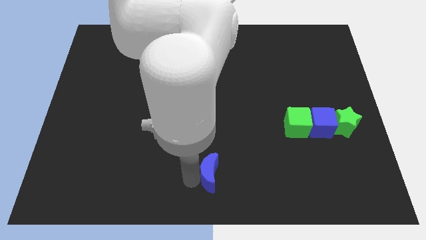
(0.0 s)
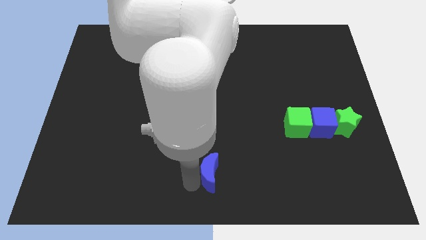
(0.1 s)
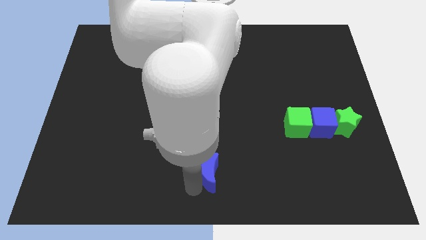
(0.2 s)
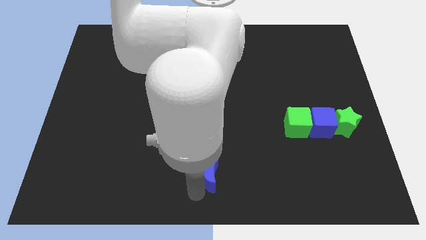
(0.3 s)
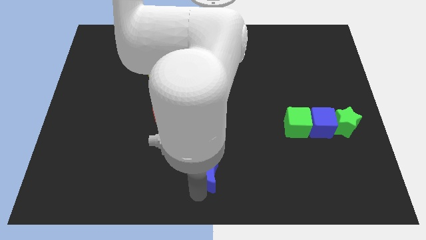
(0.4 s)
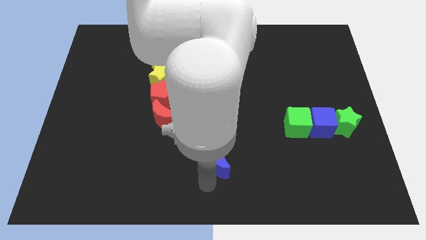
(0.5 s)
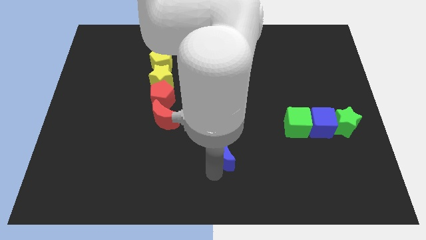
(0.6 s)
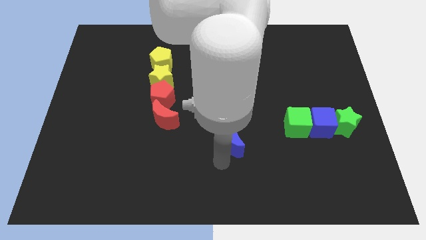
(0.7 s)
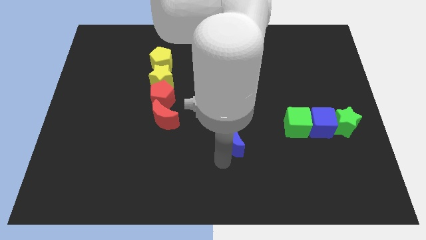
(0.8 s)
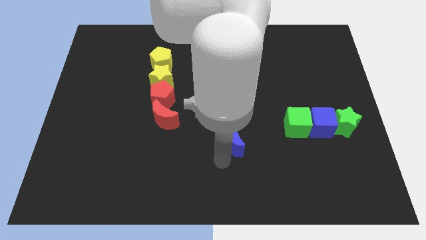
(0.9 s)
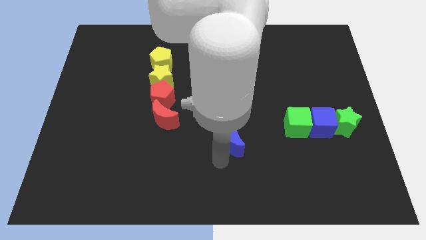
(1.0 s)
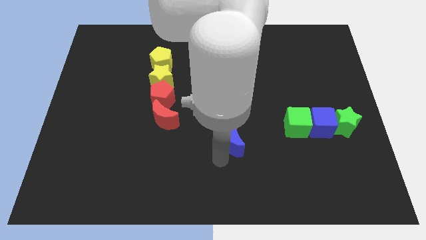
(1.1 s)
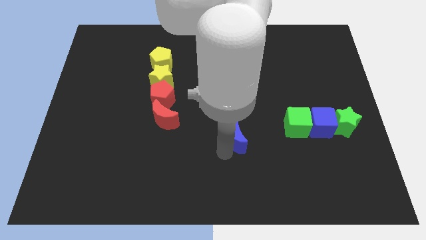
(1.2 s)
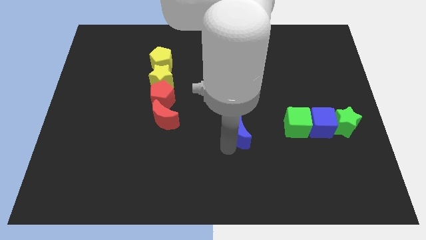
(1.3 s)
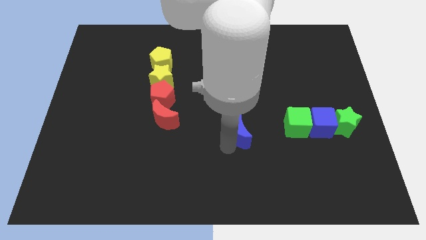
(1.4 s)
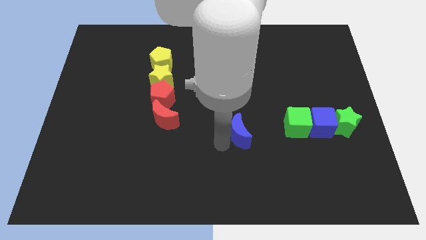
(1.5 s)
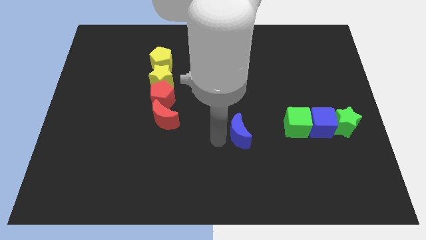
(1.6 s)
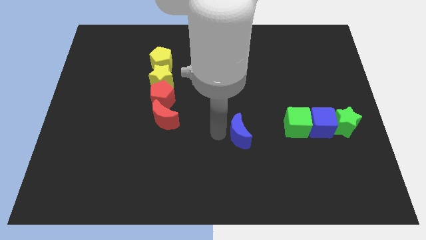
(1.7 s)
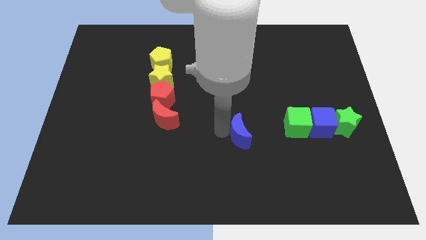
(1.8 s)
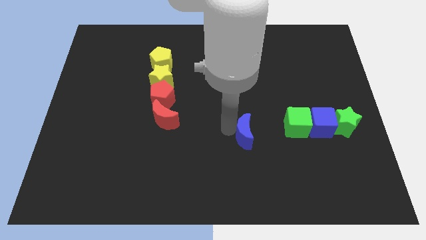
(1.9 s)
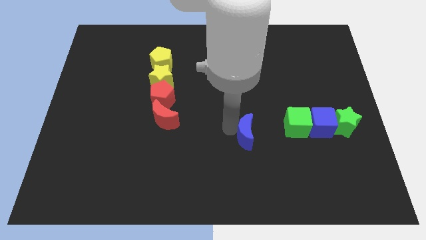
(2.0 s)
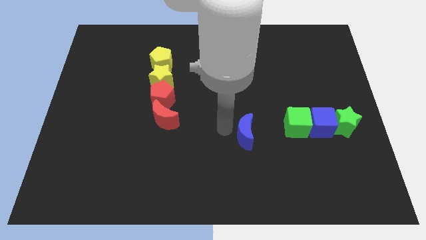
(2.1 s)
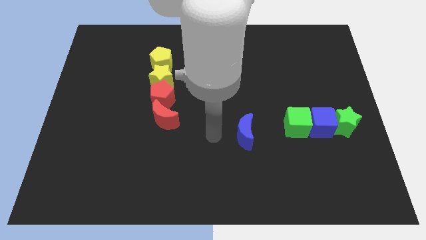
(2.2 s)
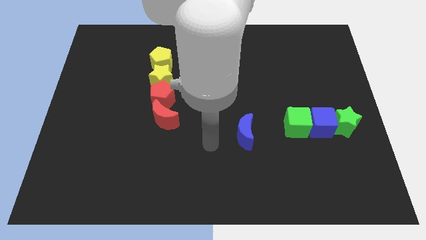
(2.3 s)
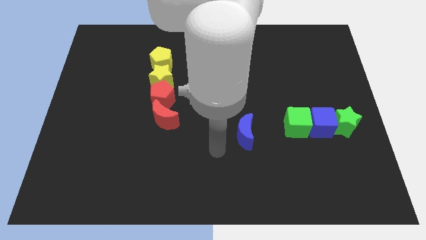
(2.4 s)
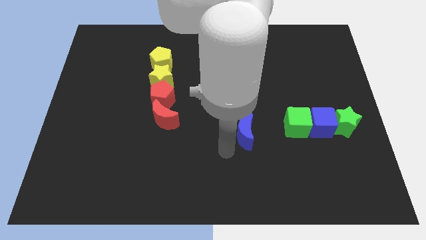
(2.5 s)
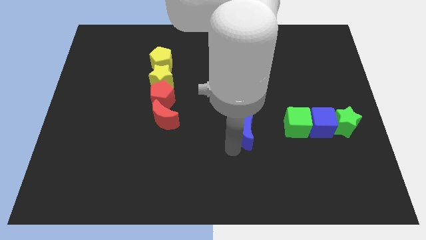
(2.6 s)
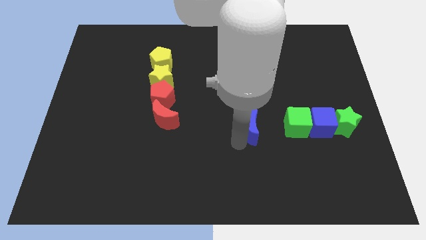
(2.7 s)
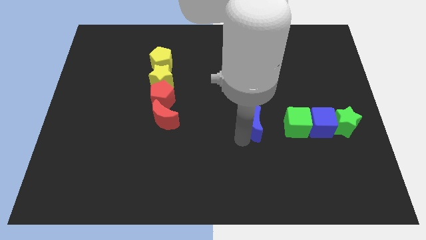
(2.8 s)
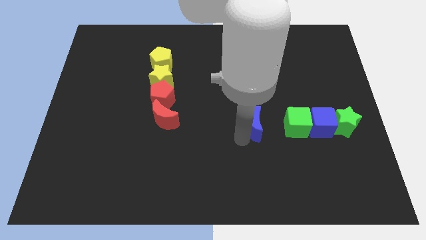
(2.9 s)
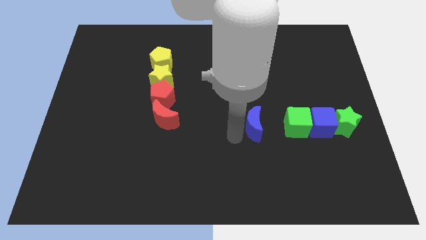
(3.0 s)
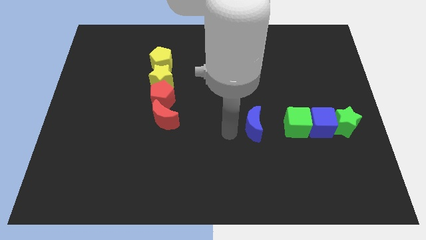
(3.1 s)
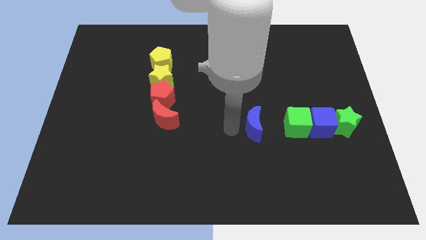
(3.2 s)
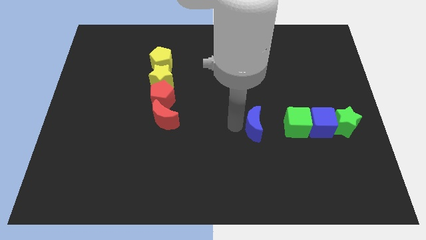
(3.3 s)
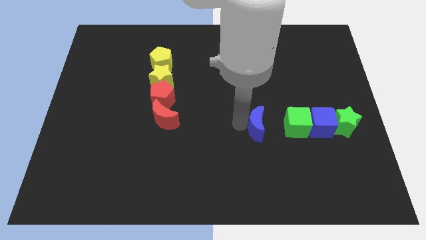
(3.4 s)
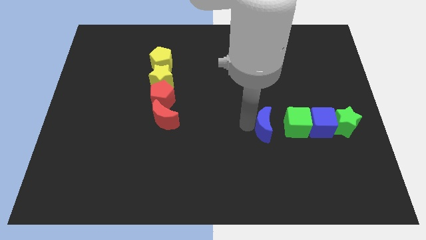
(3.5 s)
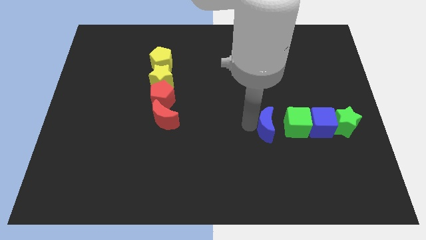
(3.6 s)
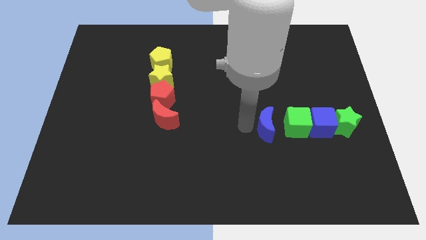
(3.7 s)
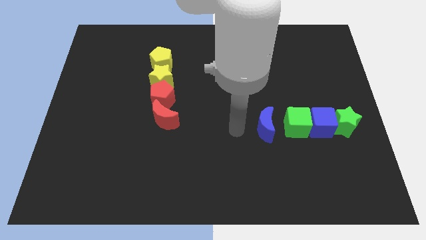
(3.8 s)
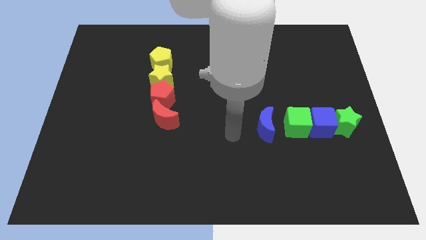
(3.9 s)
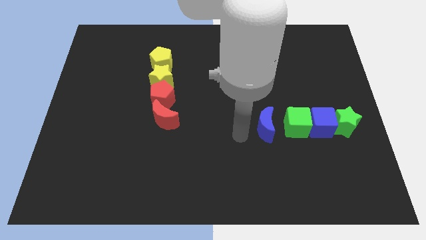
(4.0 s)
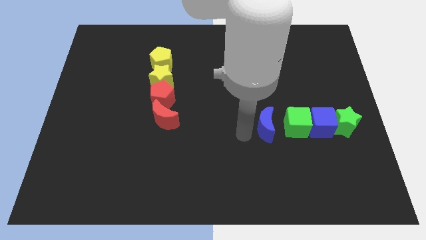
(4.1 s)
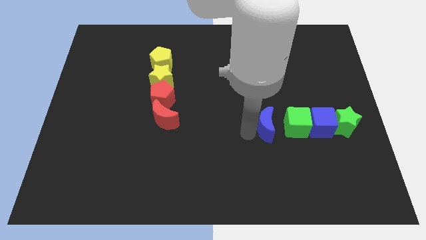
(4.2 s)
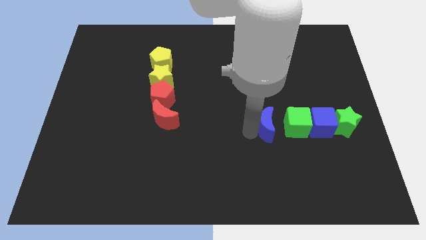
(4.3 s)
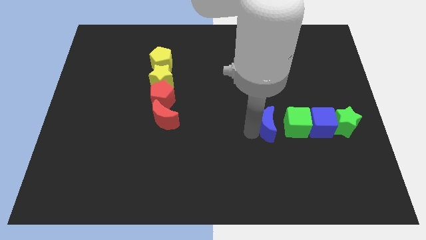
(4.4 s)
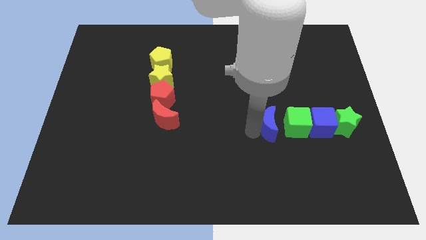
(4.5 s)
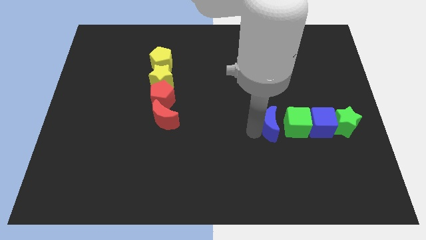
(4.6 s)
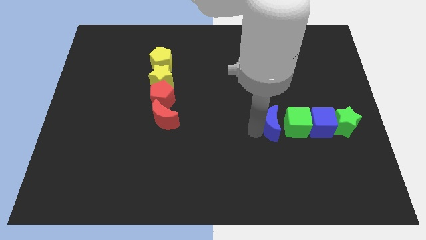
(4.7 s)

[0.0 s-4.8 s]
move the blue moon to the left side of the green cube

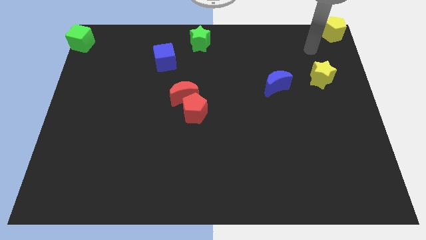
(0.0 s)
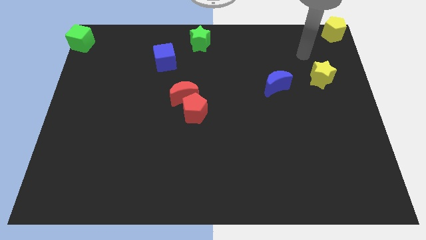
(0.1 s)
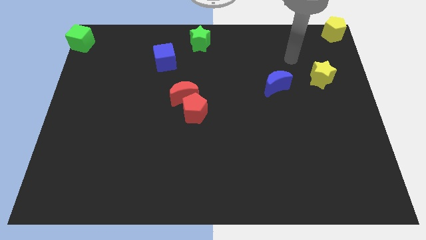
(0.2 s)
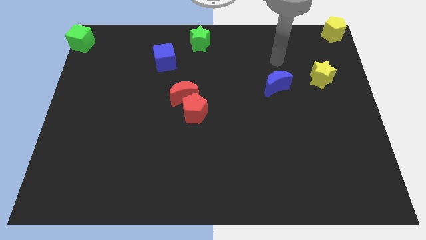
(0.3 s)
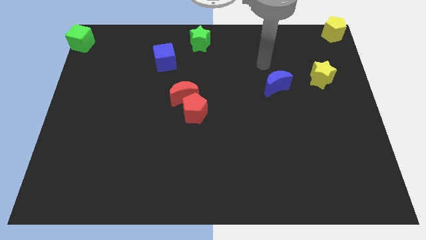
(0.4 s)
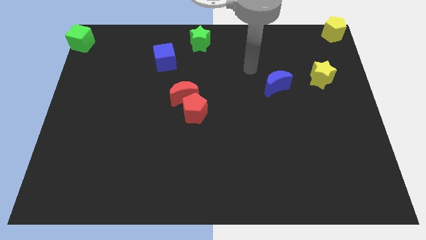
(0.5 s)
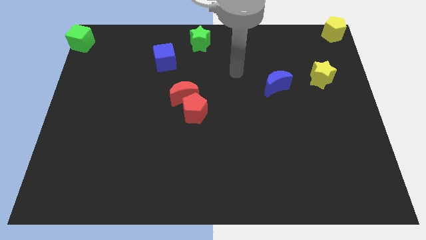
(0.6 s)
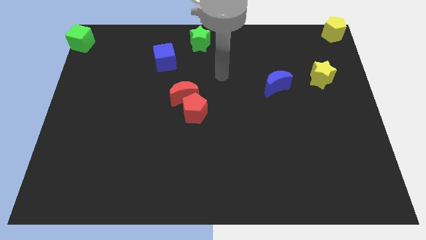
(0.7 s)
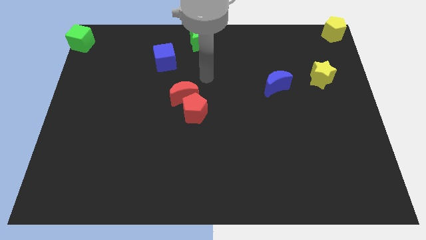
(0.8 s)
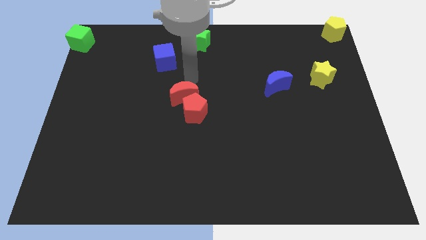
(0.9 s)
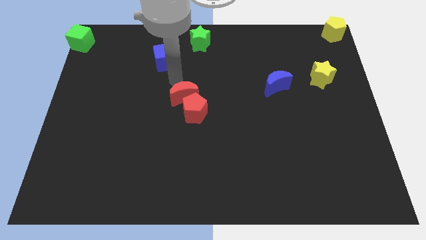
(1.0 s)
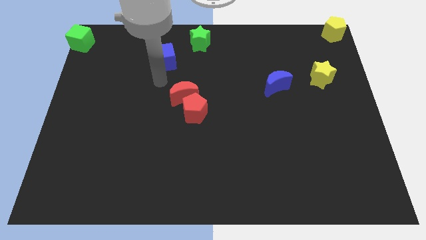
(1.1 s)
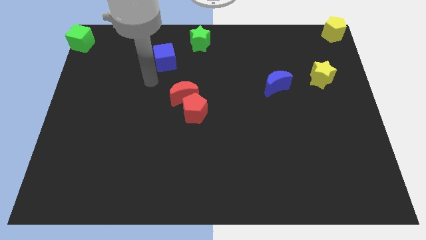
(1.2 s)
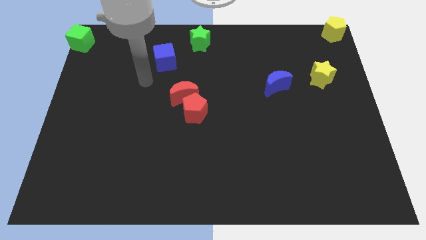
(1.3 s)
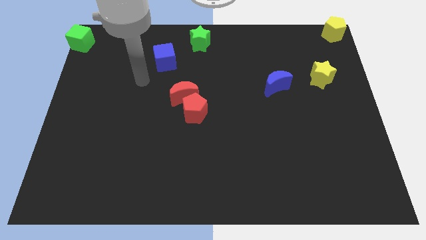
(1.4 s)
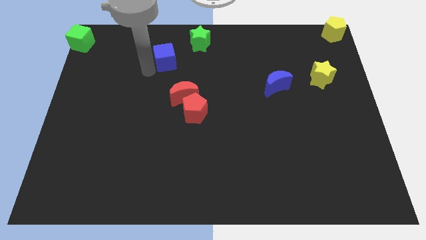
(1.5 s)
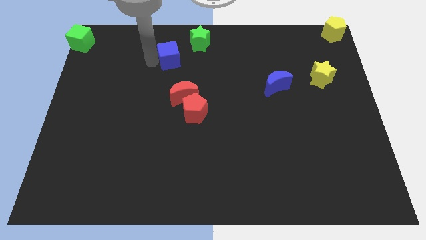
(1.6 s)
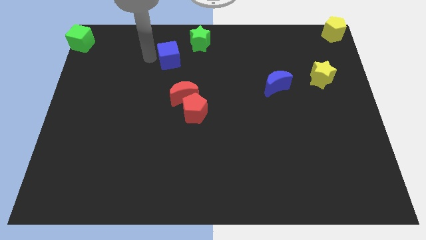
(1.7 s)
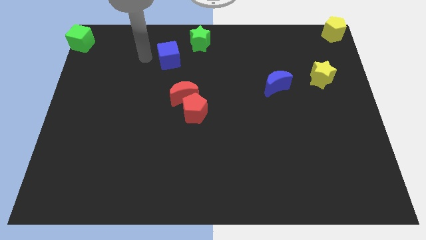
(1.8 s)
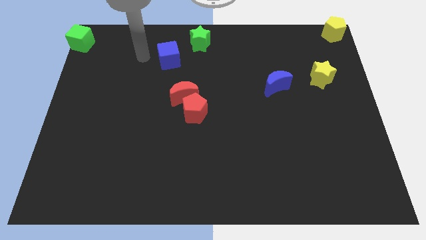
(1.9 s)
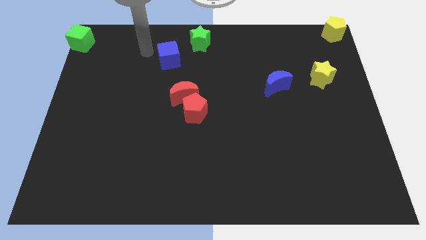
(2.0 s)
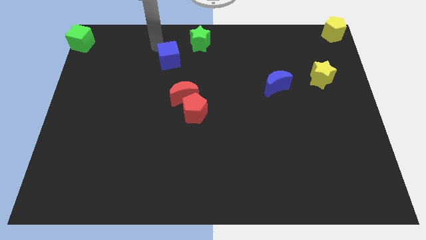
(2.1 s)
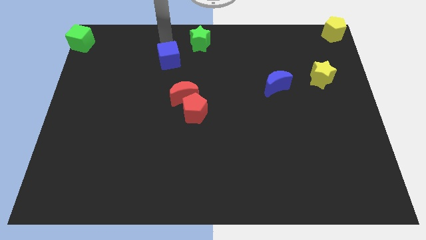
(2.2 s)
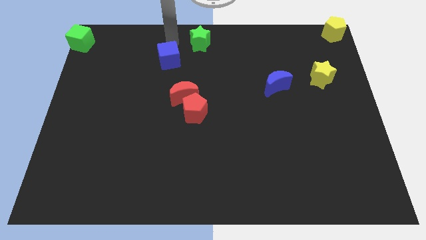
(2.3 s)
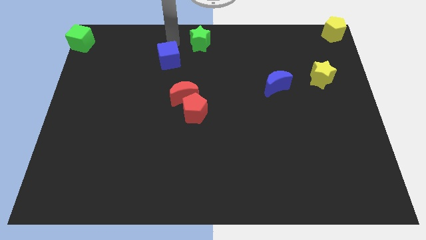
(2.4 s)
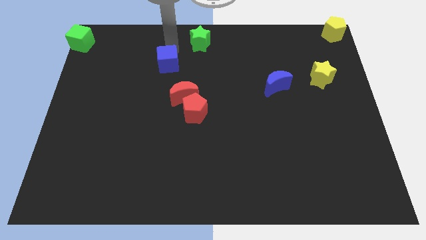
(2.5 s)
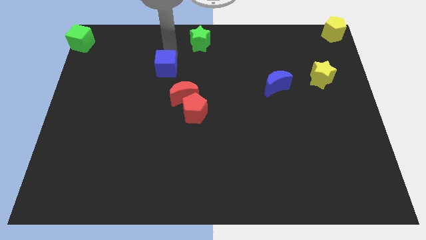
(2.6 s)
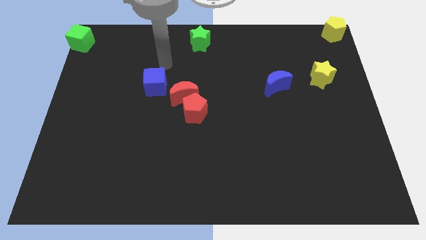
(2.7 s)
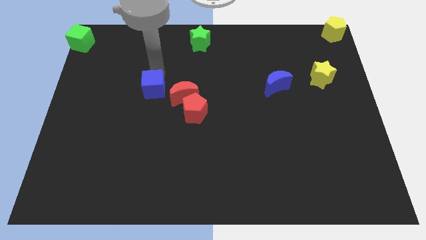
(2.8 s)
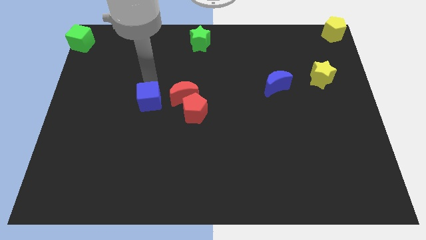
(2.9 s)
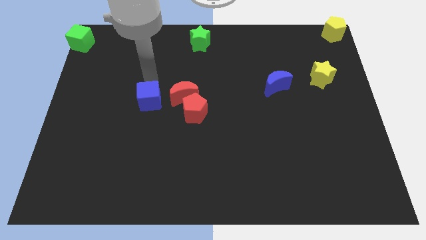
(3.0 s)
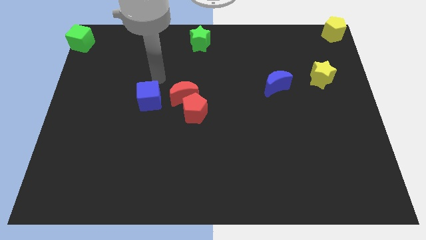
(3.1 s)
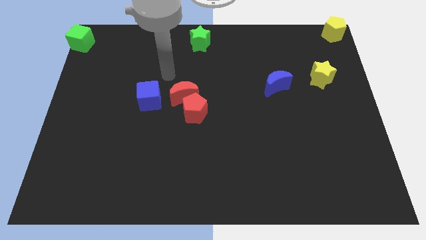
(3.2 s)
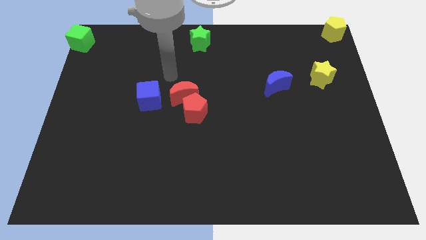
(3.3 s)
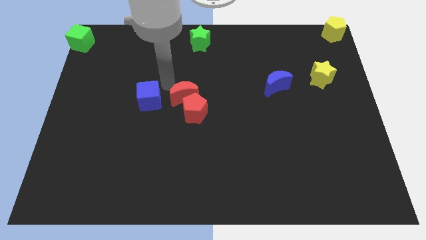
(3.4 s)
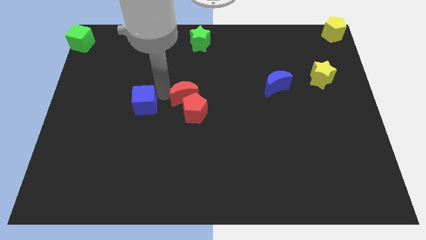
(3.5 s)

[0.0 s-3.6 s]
move the blue cube to the left of the red moon

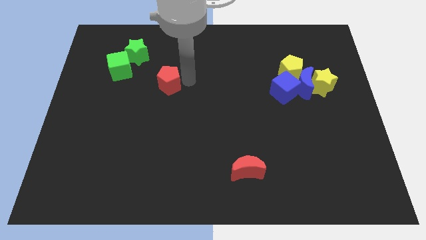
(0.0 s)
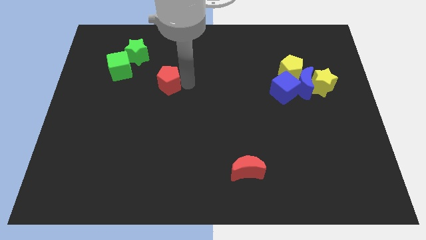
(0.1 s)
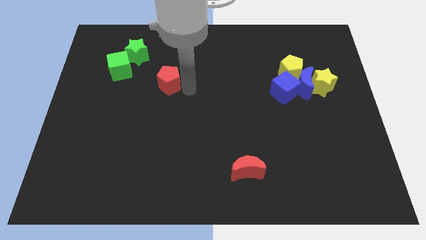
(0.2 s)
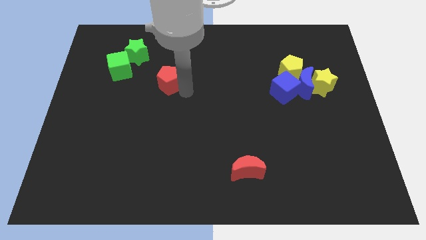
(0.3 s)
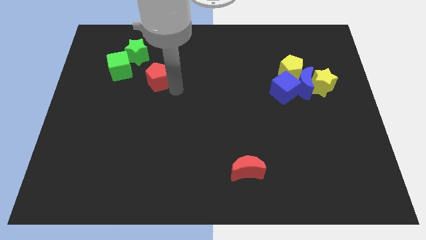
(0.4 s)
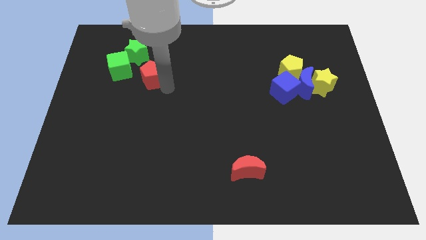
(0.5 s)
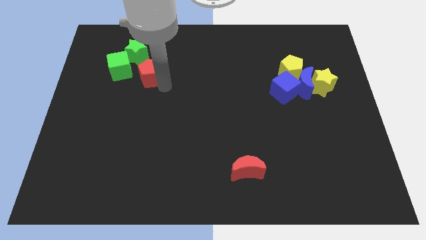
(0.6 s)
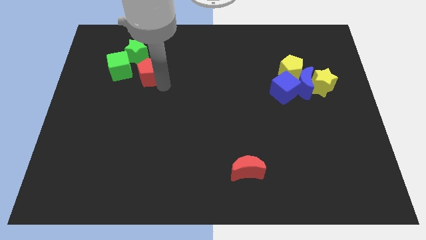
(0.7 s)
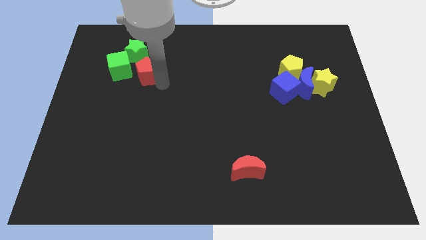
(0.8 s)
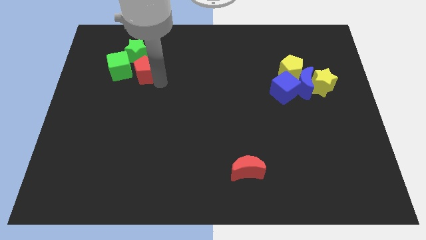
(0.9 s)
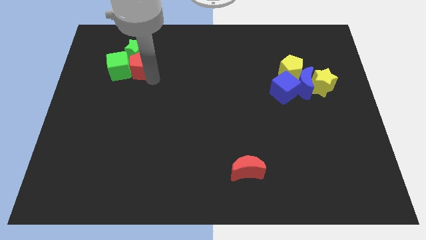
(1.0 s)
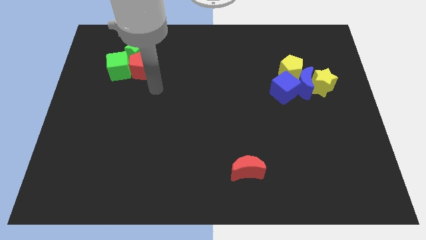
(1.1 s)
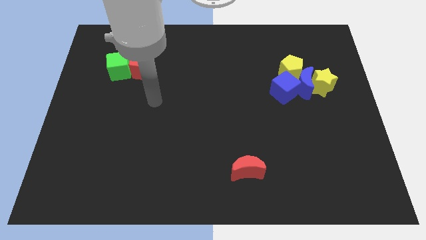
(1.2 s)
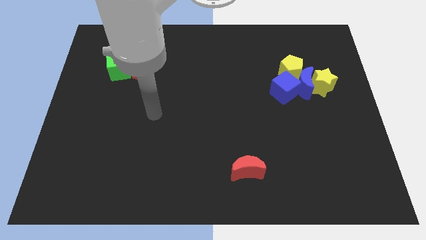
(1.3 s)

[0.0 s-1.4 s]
push the red pentagon towards the green blocks
